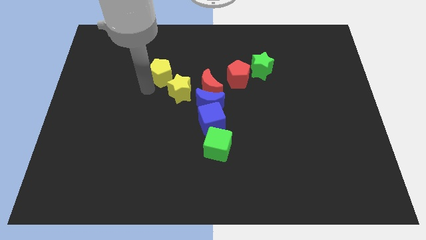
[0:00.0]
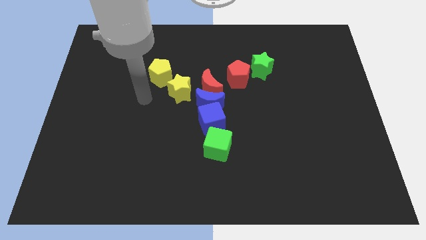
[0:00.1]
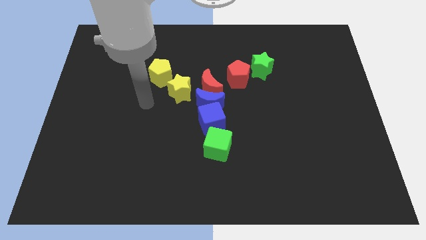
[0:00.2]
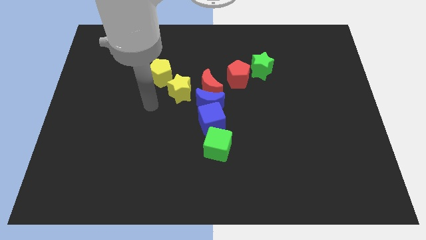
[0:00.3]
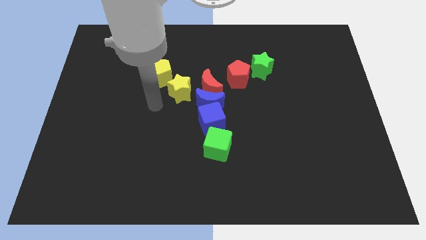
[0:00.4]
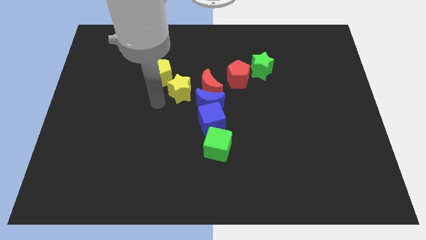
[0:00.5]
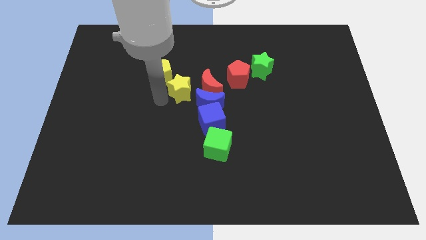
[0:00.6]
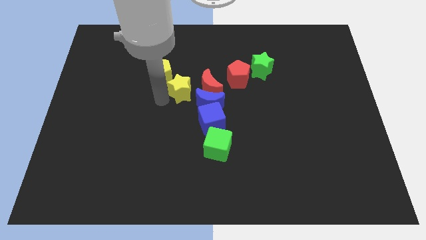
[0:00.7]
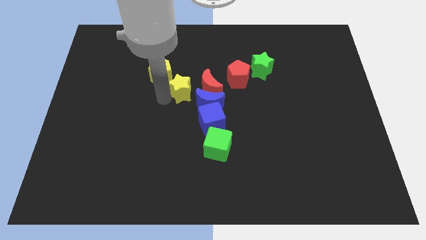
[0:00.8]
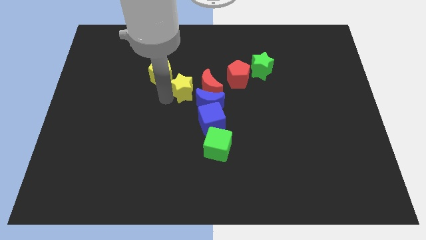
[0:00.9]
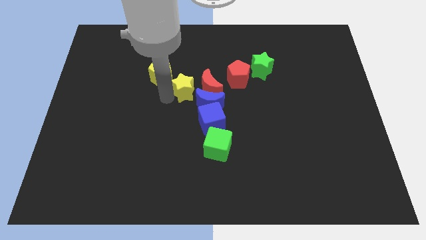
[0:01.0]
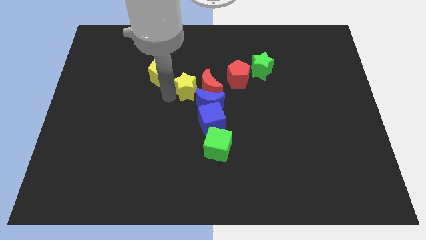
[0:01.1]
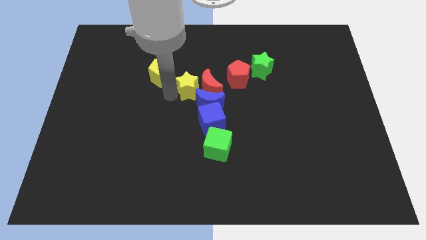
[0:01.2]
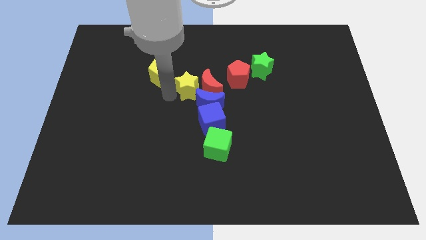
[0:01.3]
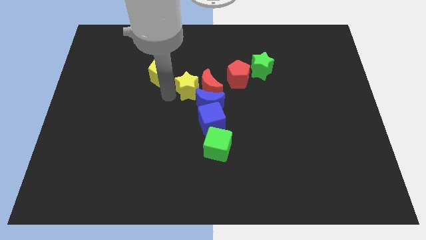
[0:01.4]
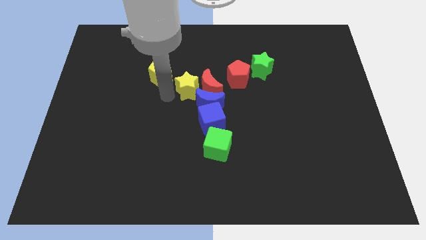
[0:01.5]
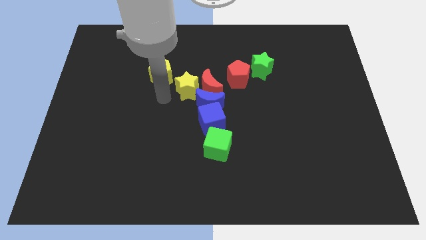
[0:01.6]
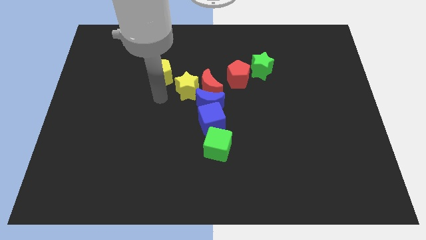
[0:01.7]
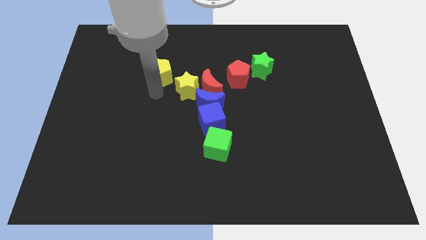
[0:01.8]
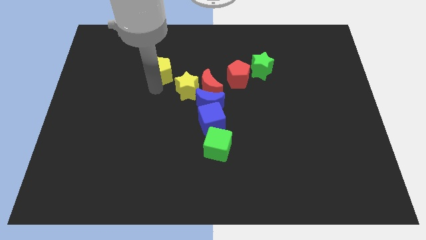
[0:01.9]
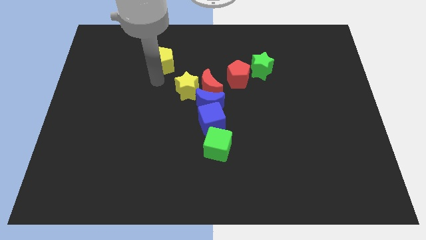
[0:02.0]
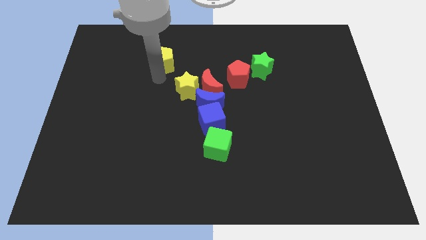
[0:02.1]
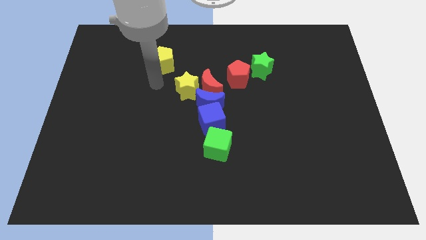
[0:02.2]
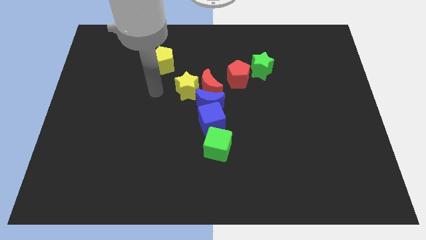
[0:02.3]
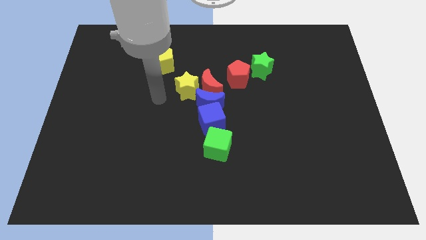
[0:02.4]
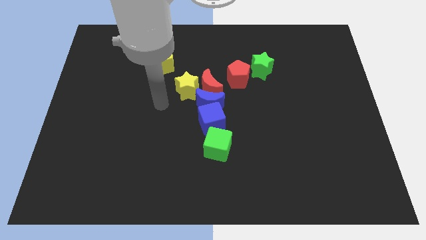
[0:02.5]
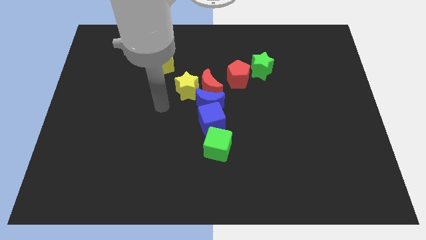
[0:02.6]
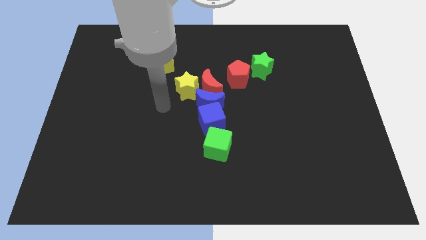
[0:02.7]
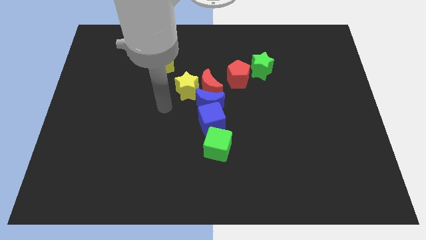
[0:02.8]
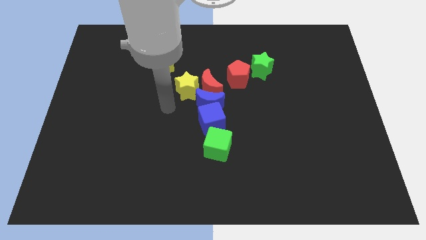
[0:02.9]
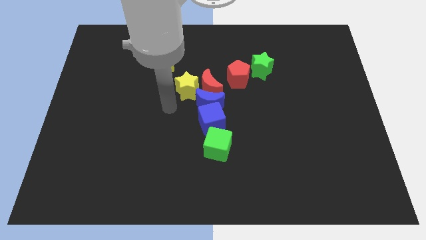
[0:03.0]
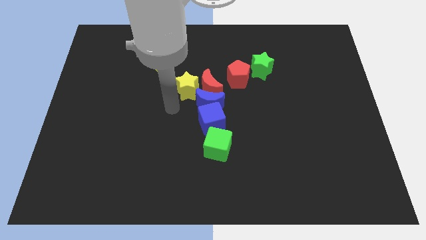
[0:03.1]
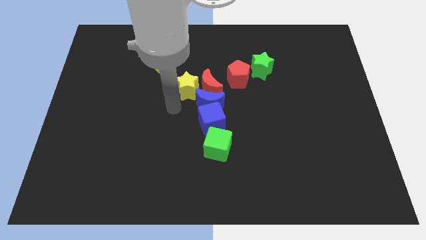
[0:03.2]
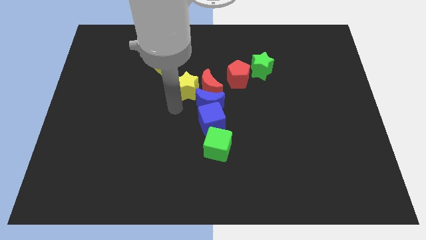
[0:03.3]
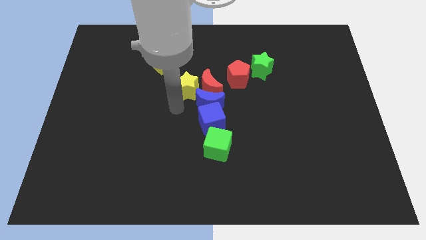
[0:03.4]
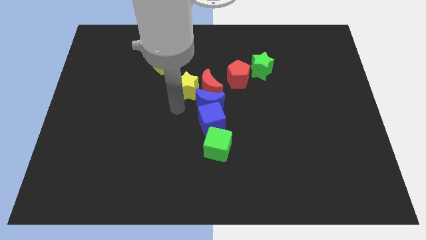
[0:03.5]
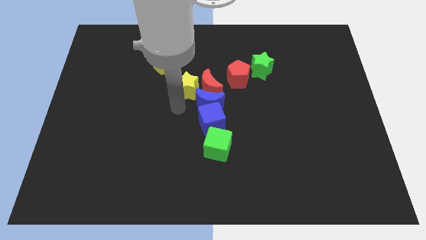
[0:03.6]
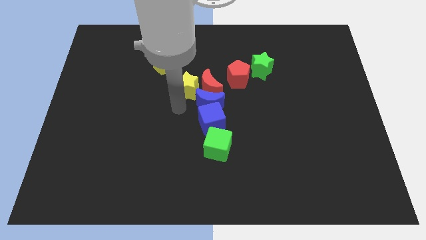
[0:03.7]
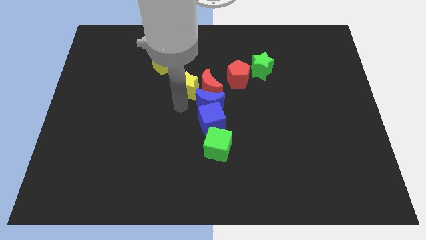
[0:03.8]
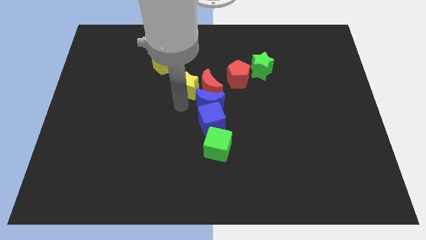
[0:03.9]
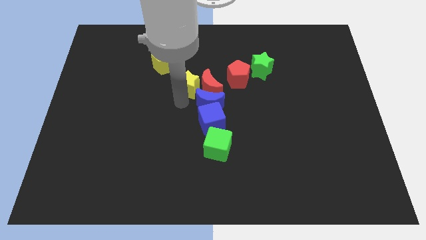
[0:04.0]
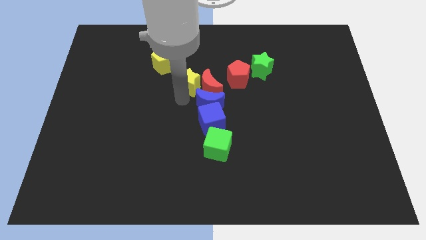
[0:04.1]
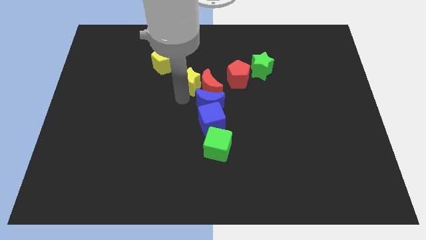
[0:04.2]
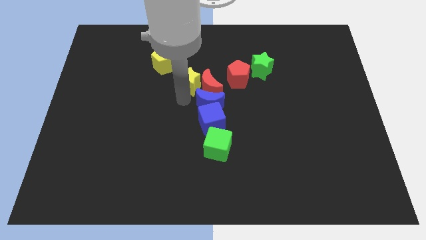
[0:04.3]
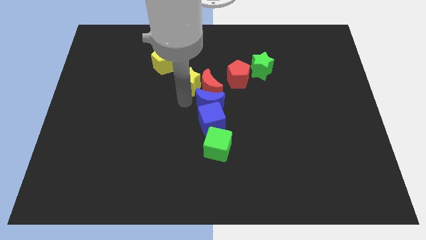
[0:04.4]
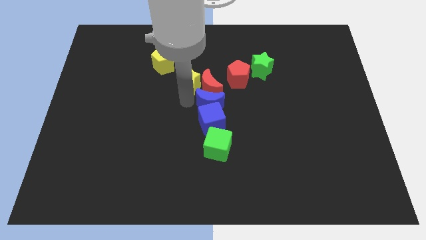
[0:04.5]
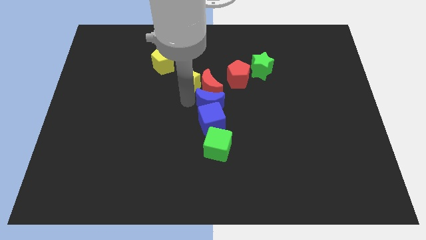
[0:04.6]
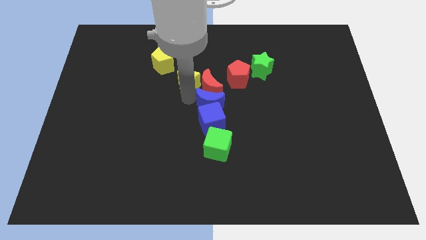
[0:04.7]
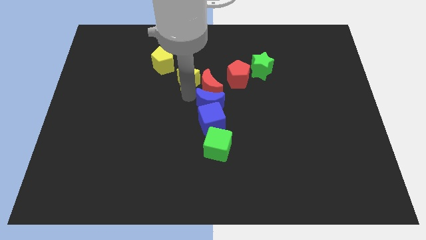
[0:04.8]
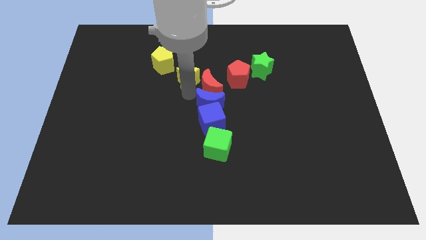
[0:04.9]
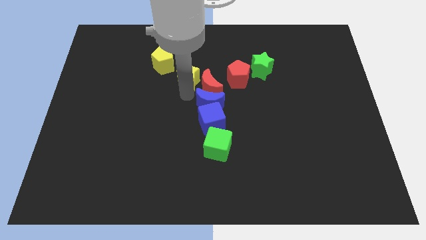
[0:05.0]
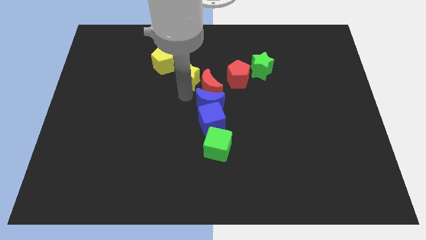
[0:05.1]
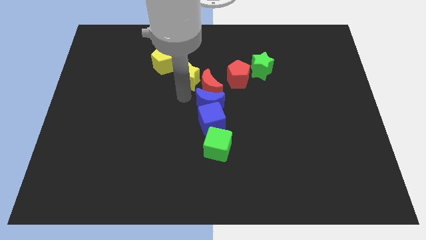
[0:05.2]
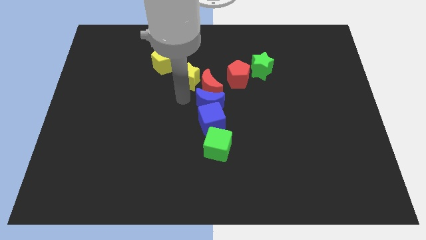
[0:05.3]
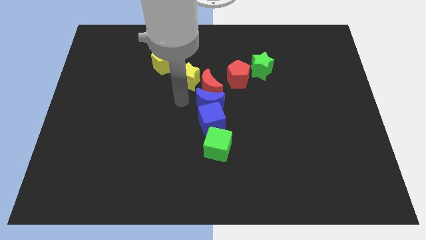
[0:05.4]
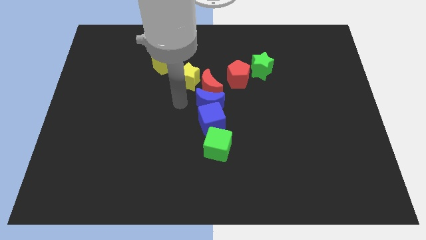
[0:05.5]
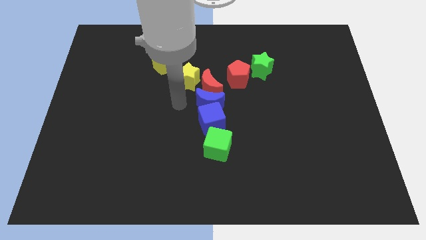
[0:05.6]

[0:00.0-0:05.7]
move the yellow star between the red crescent and yellow pentagon

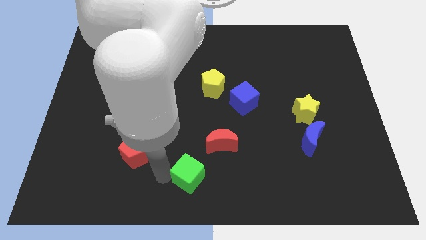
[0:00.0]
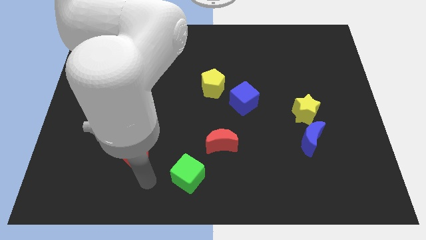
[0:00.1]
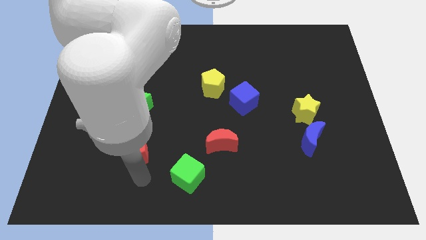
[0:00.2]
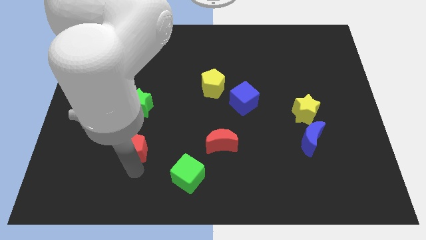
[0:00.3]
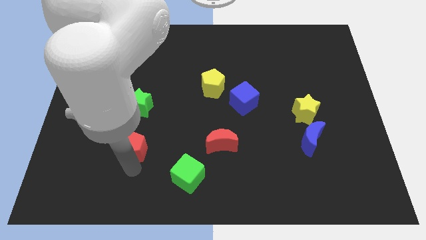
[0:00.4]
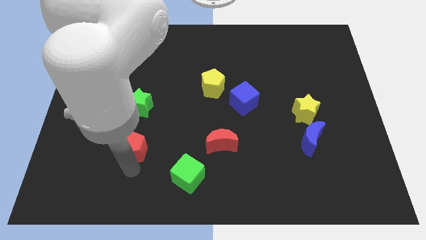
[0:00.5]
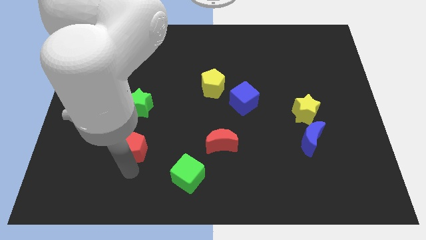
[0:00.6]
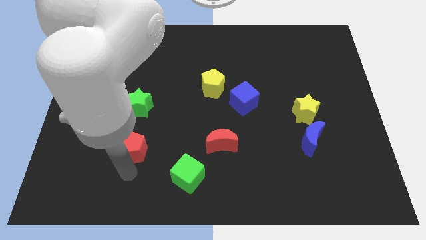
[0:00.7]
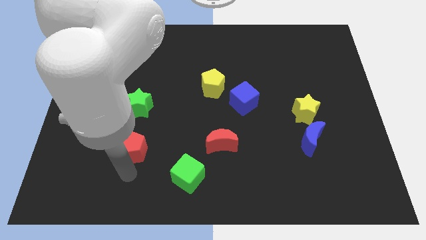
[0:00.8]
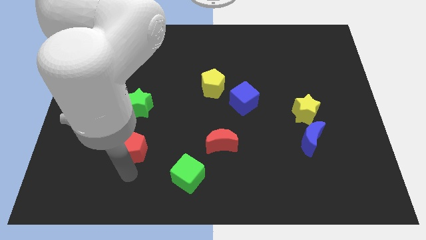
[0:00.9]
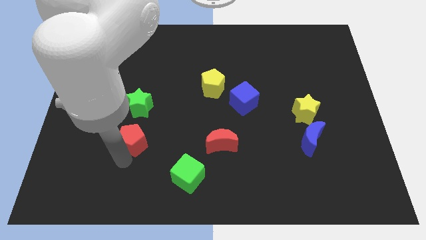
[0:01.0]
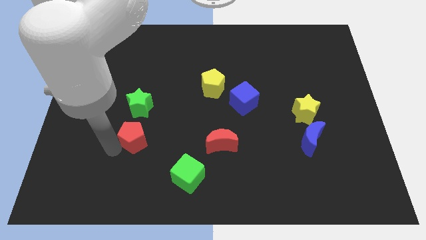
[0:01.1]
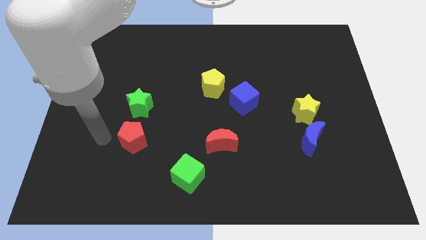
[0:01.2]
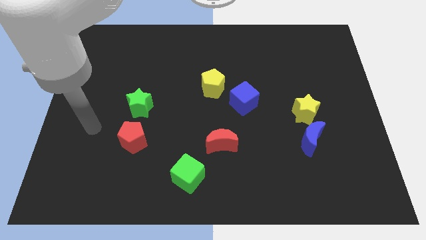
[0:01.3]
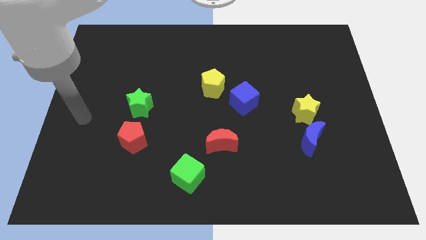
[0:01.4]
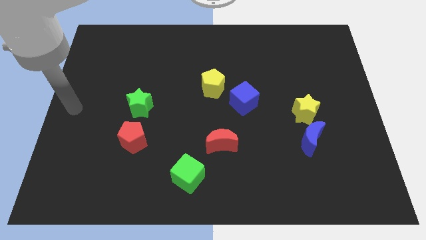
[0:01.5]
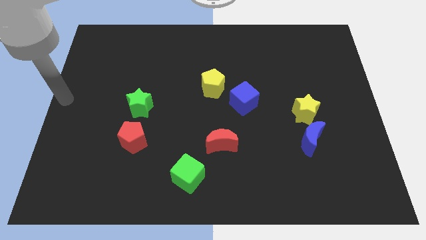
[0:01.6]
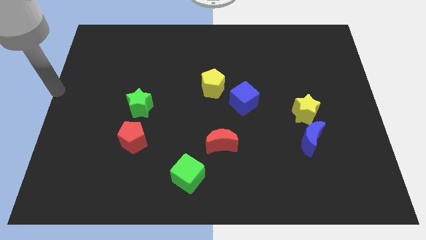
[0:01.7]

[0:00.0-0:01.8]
push the red pentagon below green star

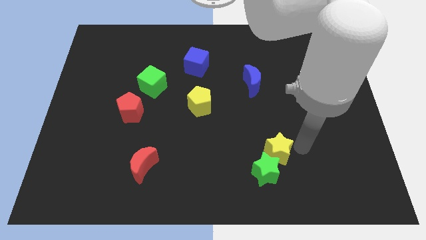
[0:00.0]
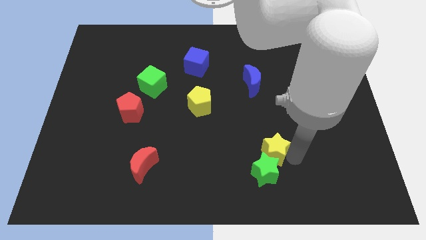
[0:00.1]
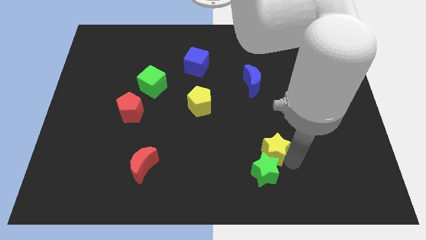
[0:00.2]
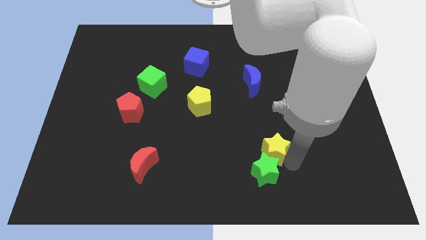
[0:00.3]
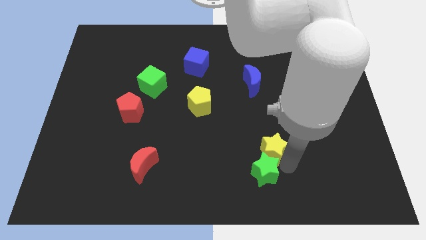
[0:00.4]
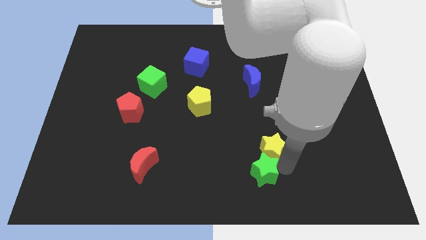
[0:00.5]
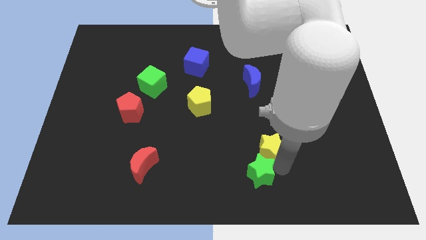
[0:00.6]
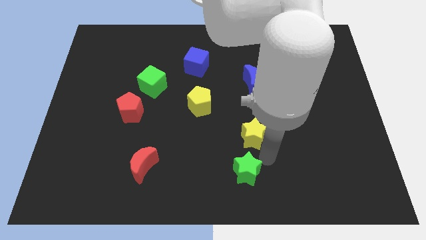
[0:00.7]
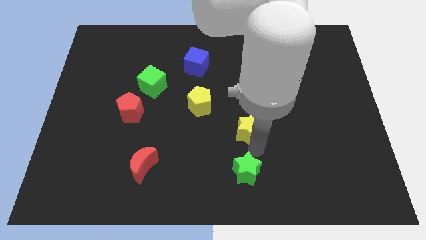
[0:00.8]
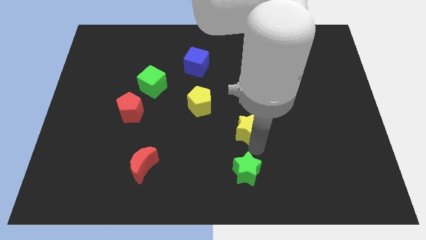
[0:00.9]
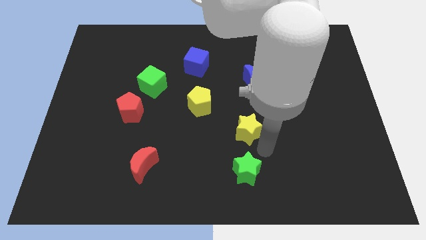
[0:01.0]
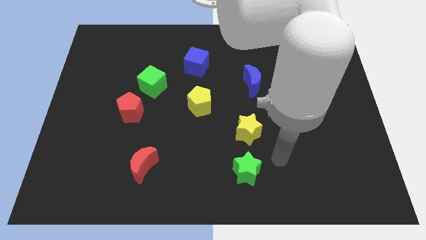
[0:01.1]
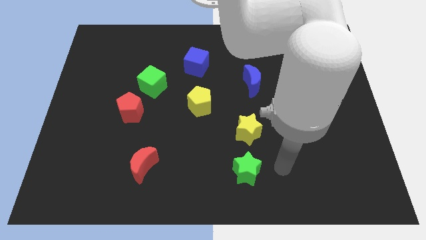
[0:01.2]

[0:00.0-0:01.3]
push the yellow star up slightly to the diagonal bottom right of the yellow pentagon

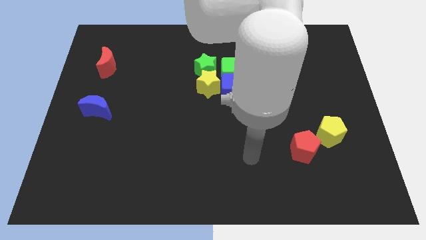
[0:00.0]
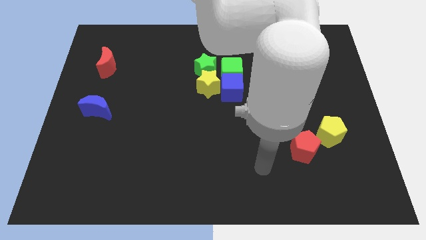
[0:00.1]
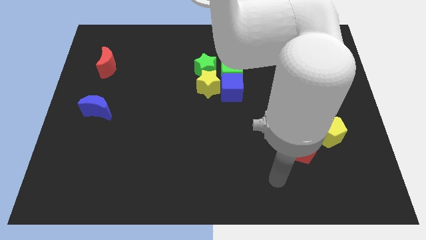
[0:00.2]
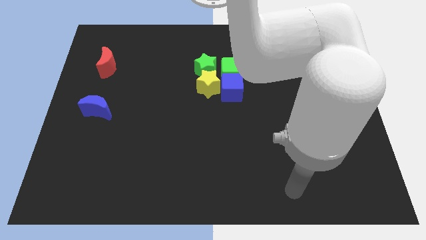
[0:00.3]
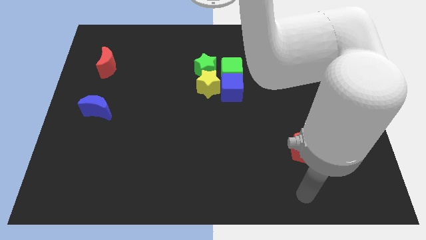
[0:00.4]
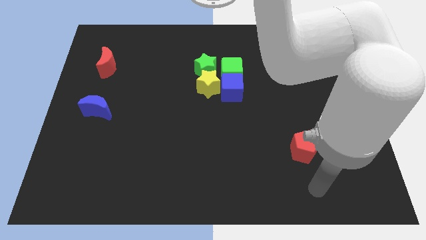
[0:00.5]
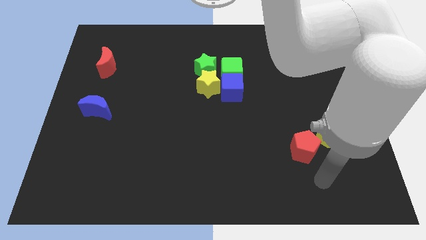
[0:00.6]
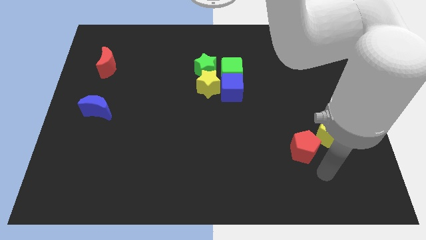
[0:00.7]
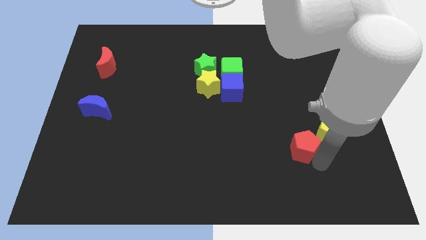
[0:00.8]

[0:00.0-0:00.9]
move arm close to red pentagon
